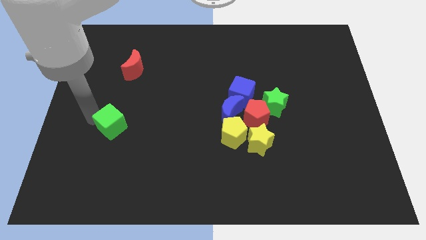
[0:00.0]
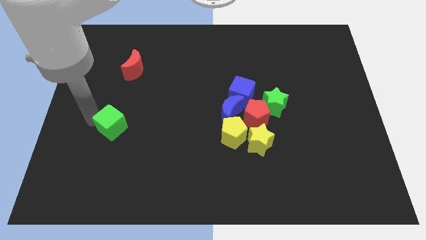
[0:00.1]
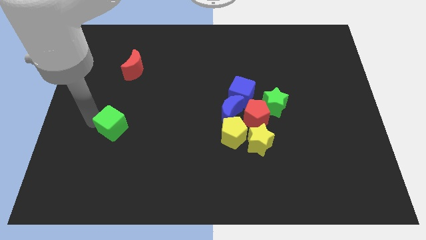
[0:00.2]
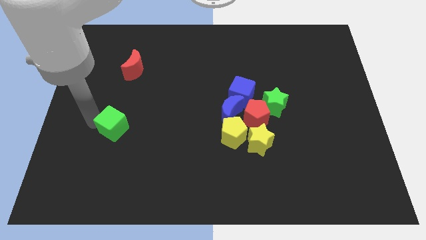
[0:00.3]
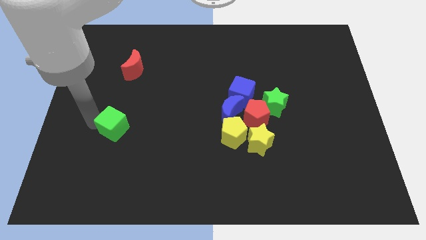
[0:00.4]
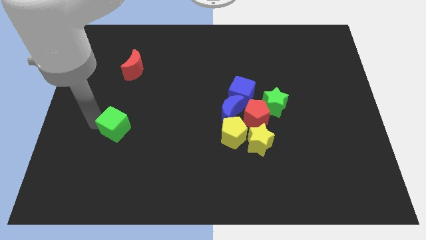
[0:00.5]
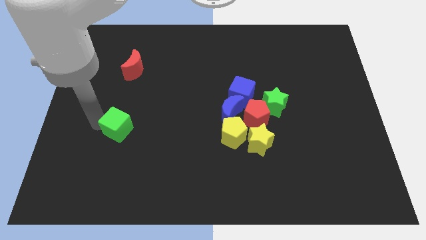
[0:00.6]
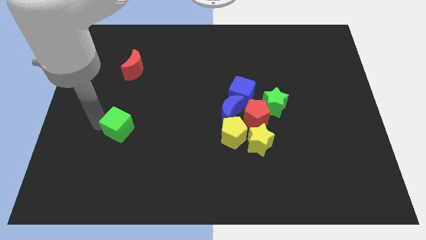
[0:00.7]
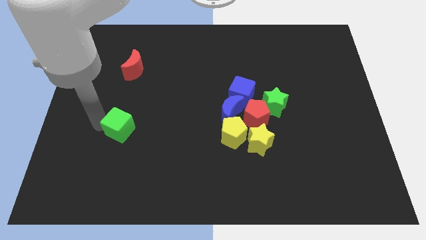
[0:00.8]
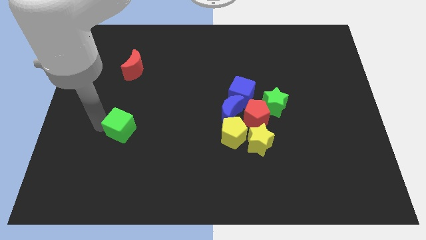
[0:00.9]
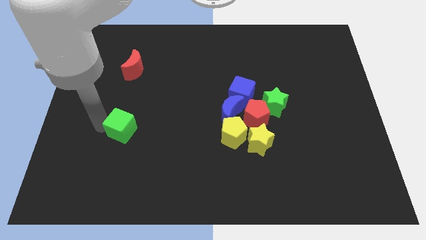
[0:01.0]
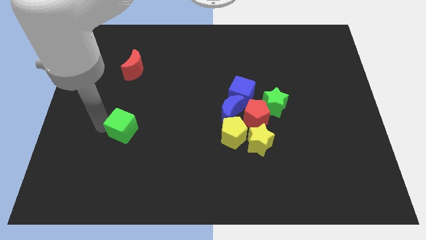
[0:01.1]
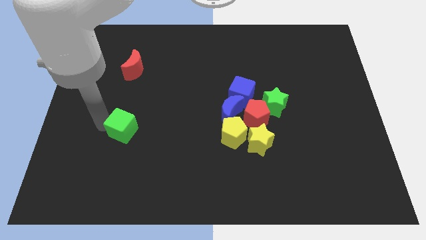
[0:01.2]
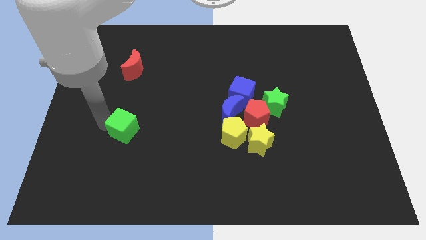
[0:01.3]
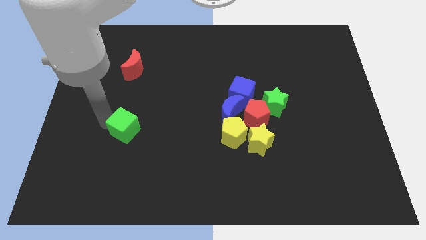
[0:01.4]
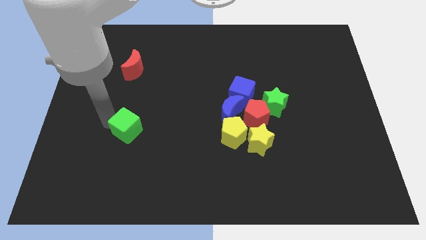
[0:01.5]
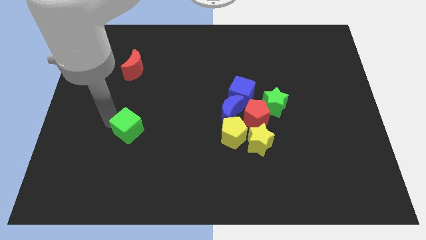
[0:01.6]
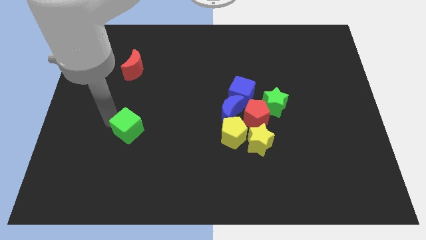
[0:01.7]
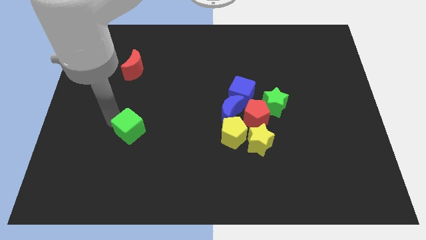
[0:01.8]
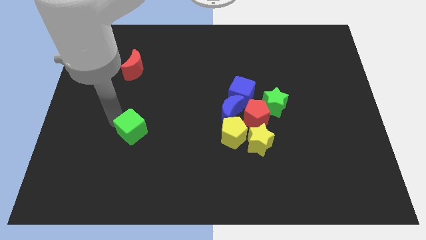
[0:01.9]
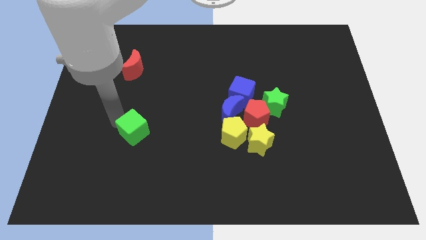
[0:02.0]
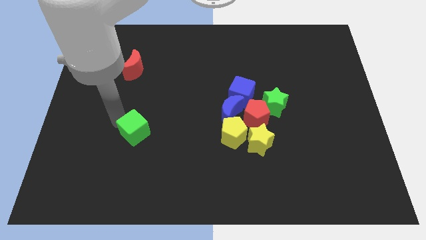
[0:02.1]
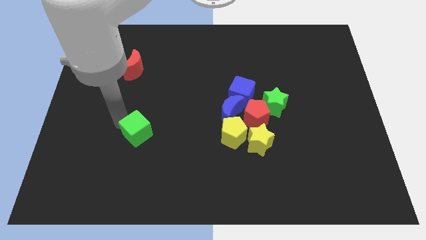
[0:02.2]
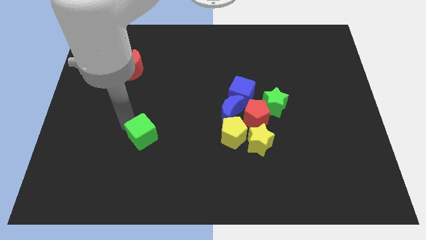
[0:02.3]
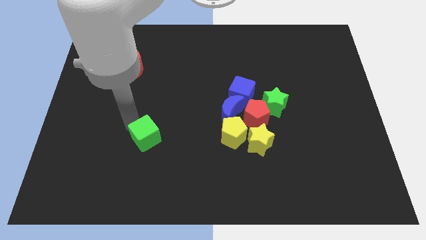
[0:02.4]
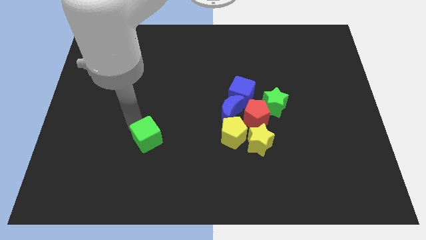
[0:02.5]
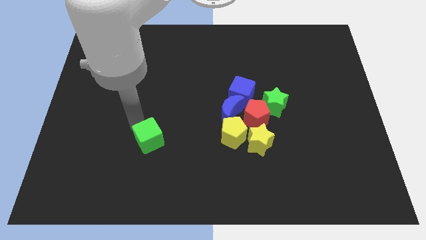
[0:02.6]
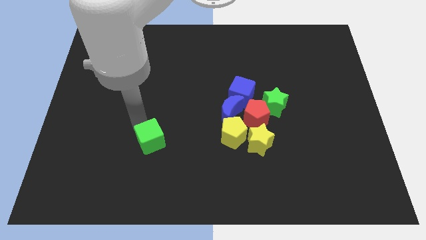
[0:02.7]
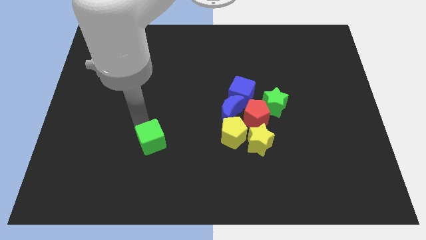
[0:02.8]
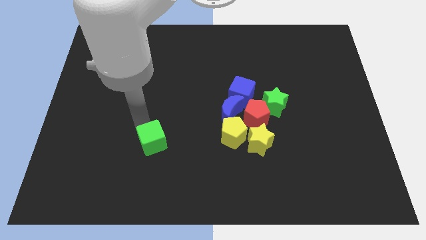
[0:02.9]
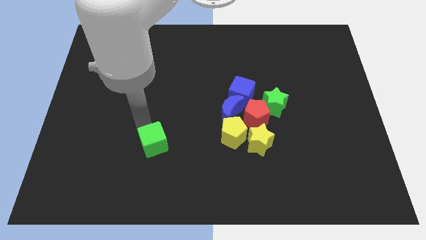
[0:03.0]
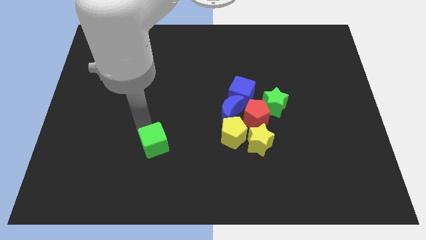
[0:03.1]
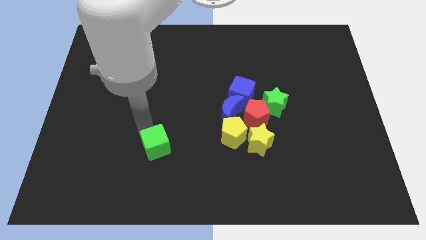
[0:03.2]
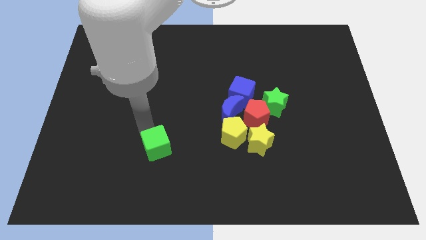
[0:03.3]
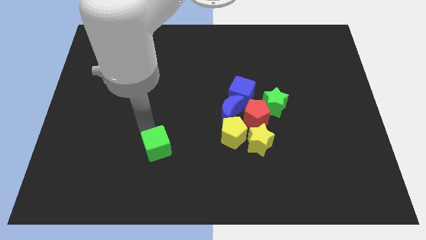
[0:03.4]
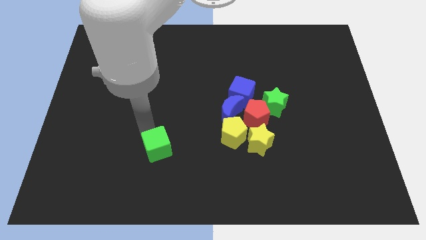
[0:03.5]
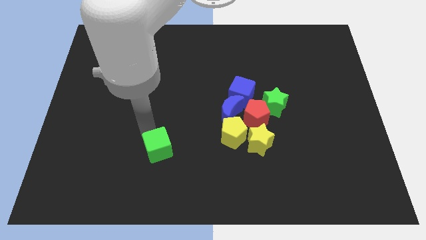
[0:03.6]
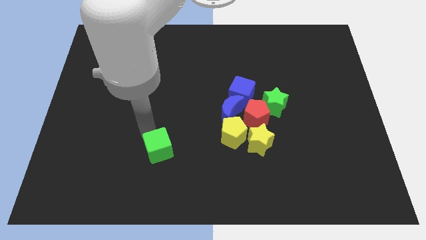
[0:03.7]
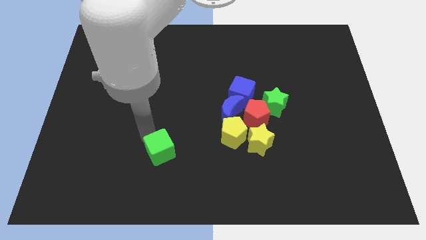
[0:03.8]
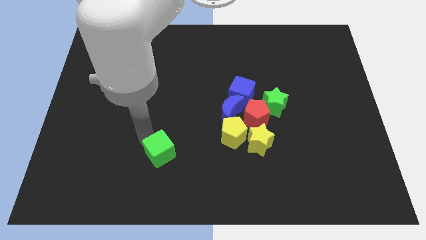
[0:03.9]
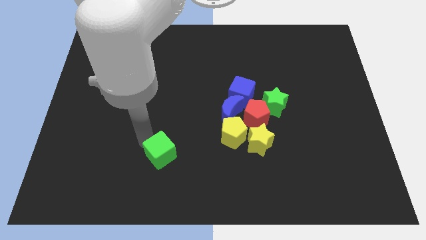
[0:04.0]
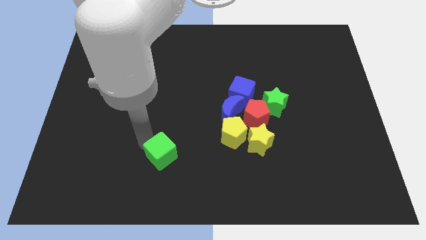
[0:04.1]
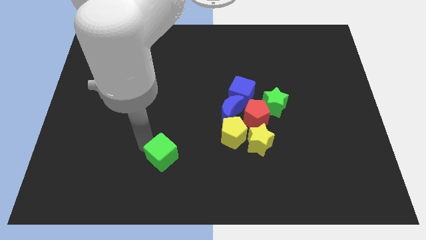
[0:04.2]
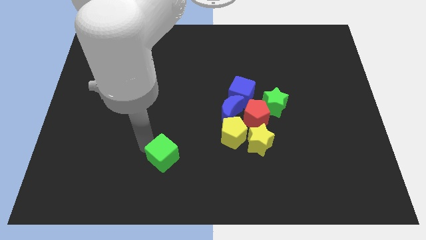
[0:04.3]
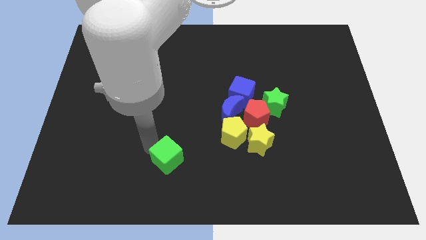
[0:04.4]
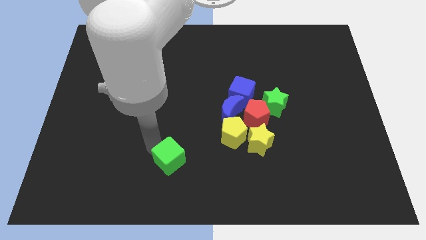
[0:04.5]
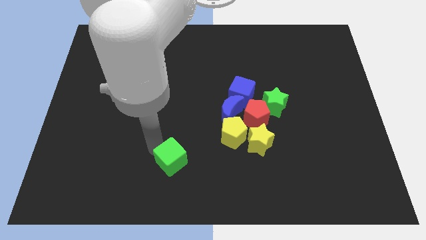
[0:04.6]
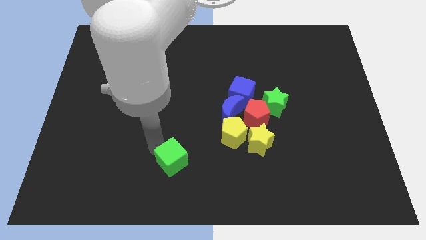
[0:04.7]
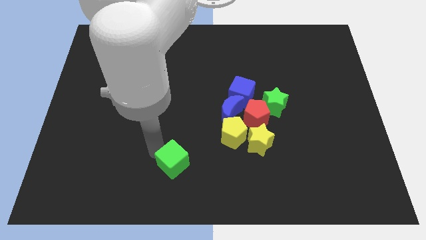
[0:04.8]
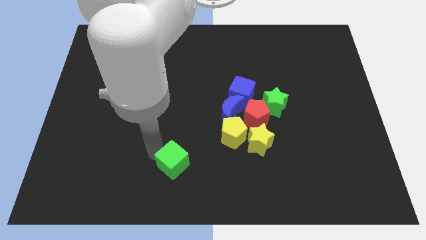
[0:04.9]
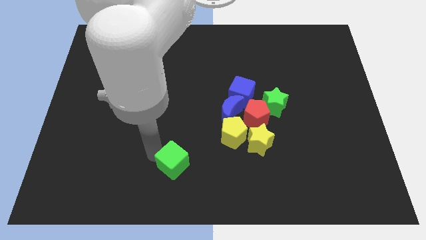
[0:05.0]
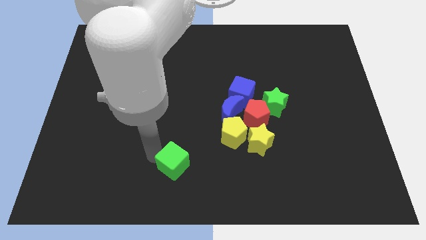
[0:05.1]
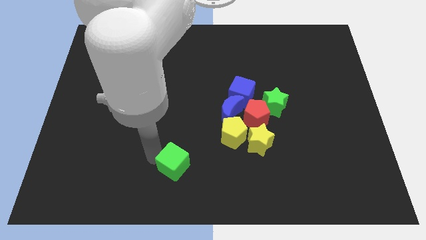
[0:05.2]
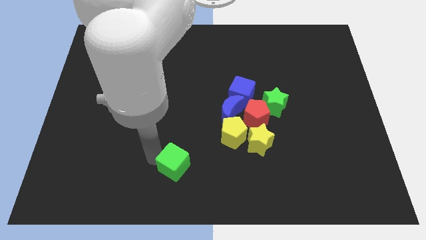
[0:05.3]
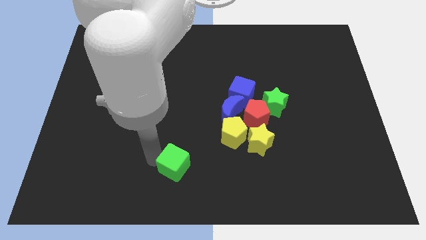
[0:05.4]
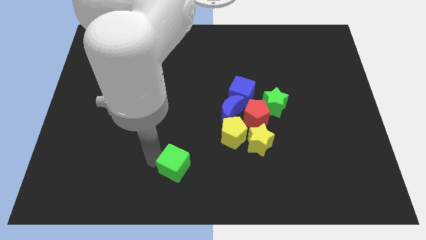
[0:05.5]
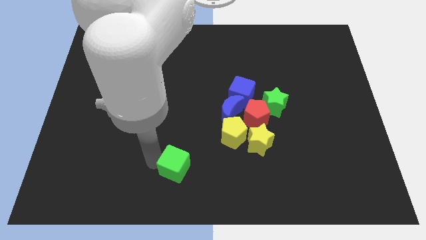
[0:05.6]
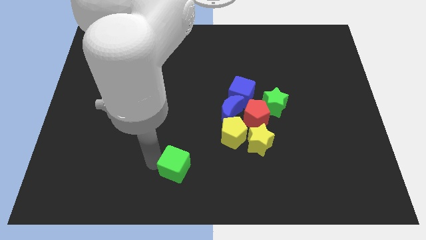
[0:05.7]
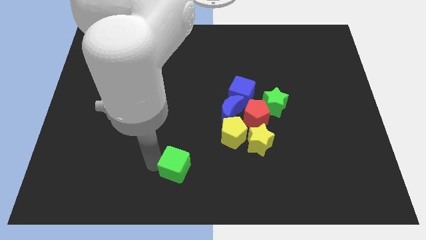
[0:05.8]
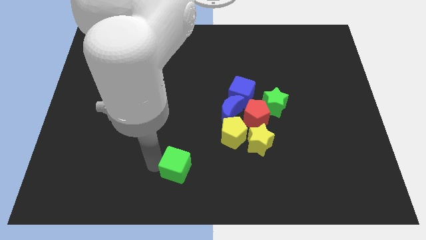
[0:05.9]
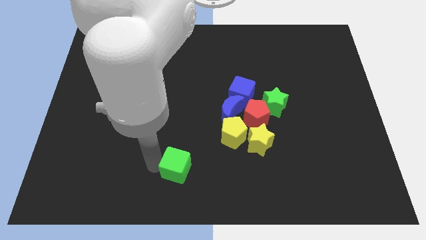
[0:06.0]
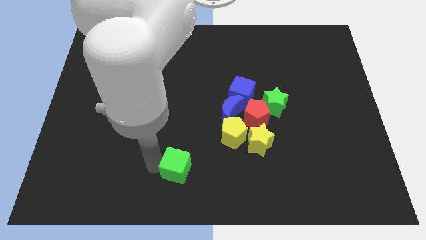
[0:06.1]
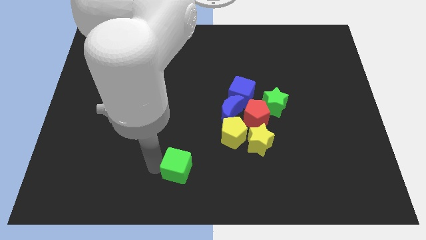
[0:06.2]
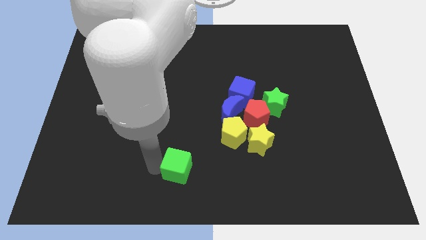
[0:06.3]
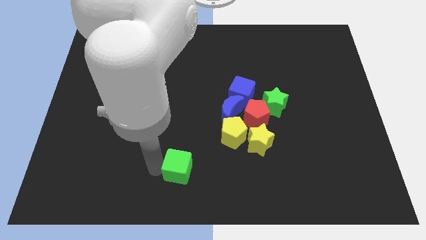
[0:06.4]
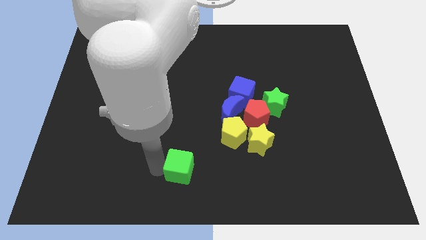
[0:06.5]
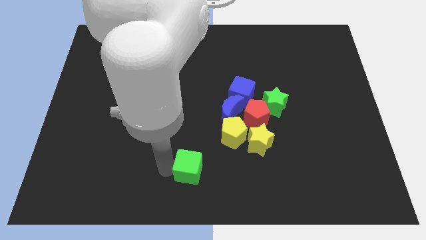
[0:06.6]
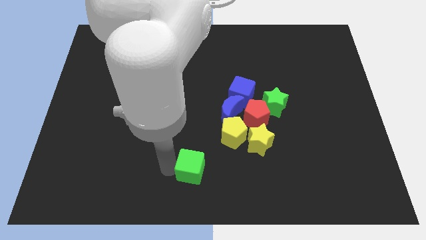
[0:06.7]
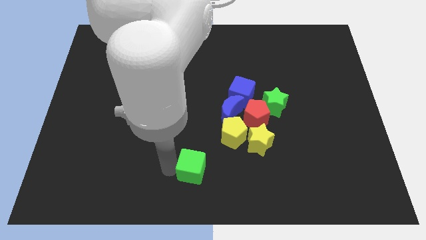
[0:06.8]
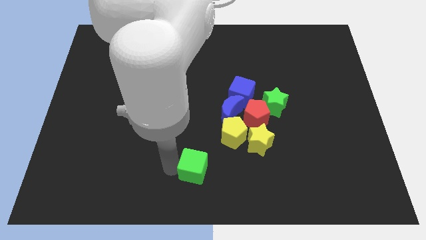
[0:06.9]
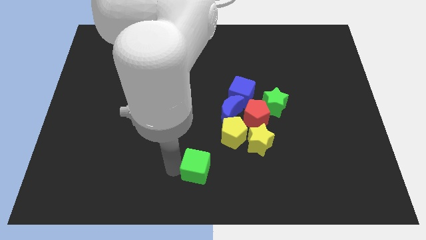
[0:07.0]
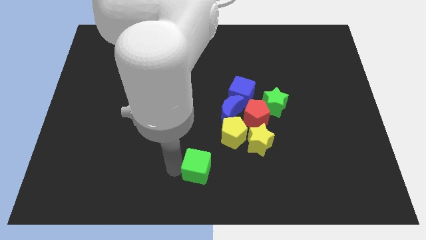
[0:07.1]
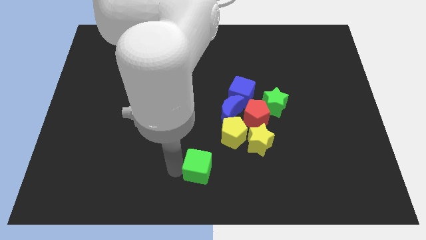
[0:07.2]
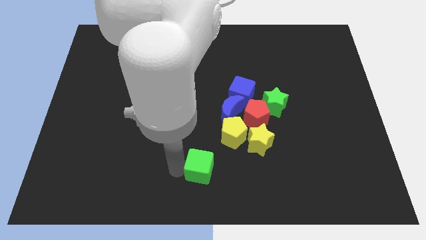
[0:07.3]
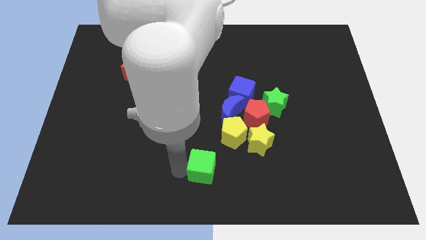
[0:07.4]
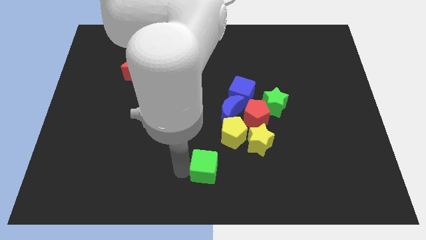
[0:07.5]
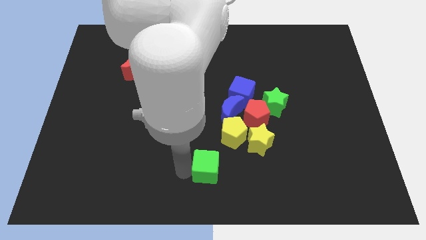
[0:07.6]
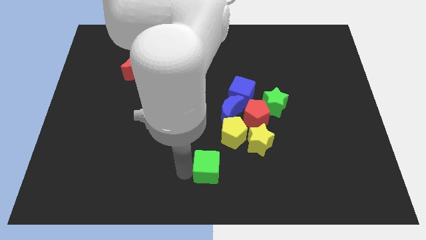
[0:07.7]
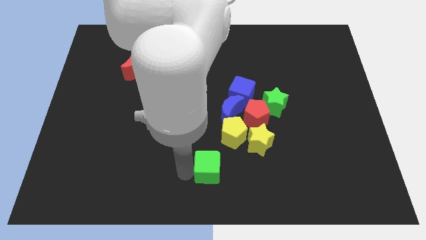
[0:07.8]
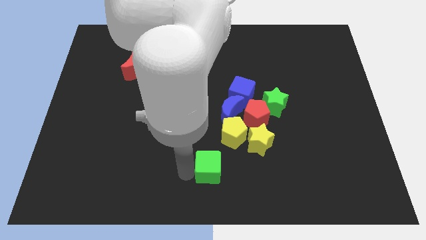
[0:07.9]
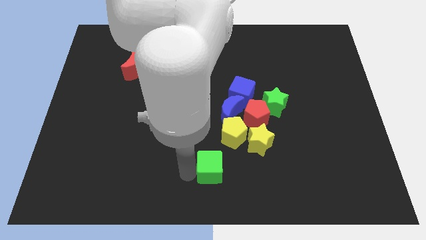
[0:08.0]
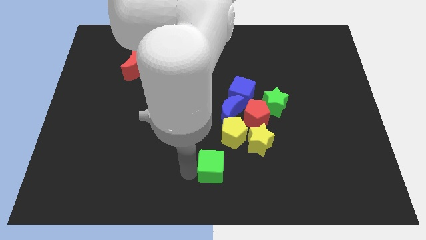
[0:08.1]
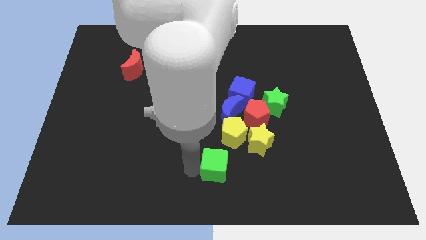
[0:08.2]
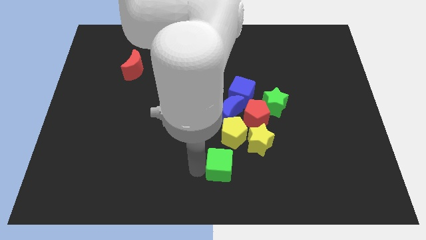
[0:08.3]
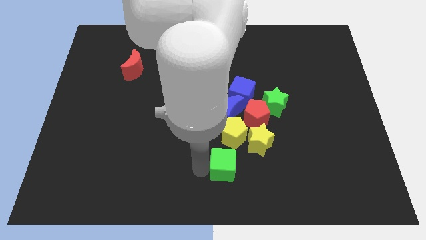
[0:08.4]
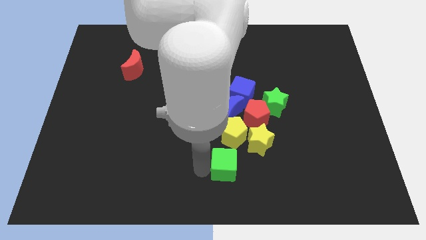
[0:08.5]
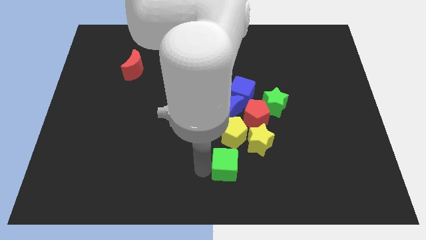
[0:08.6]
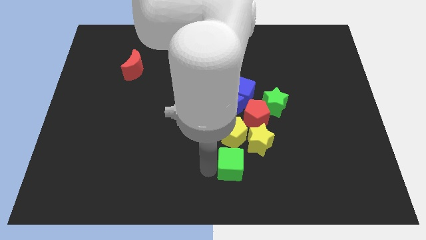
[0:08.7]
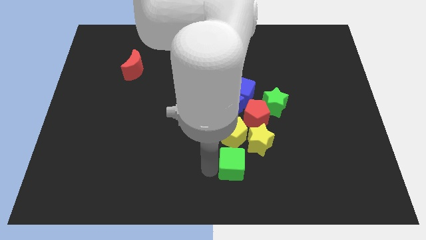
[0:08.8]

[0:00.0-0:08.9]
move green cube below yellow pentagon
